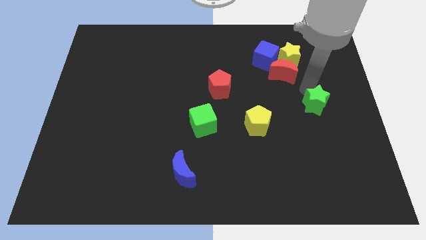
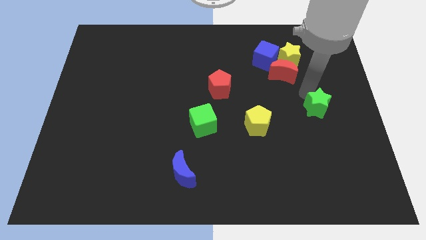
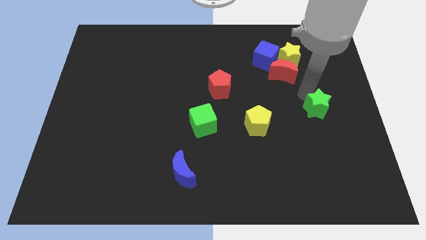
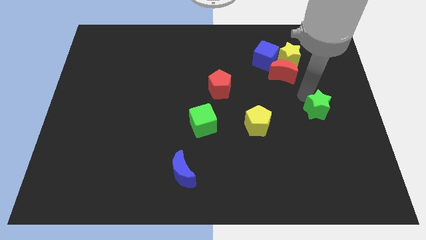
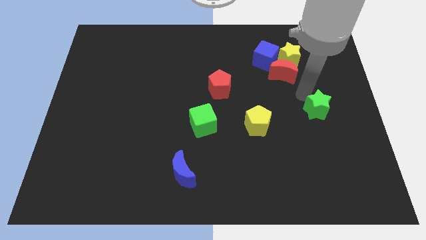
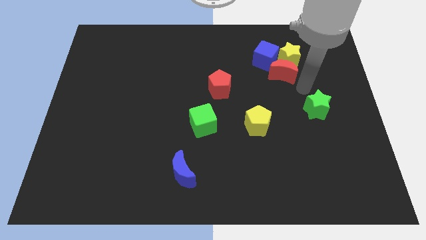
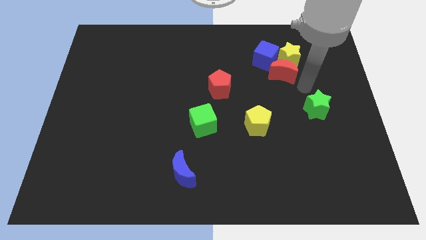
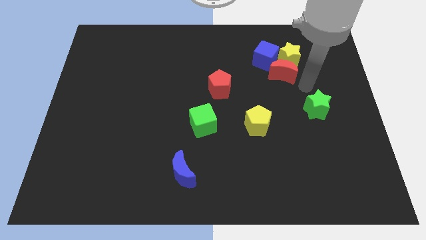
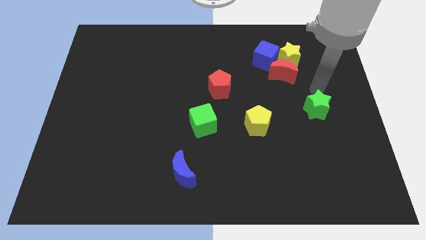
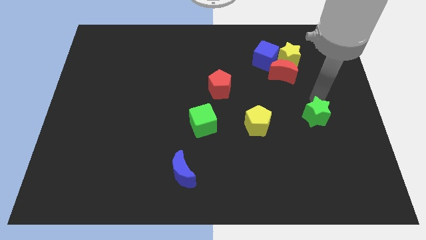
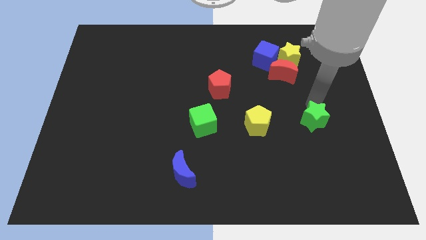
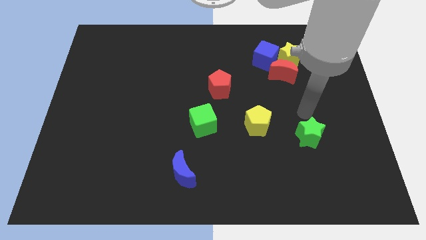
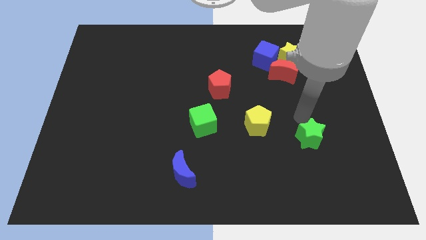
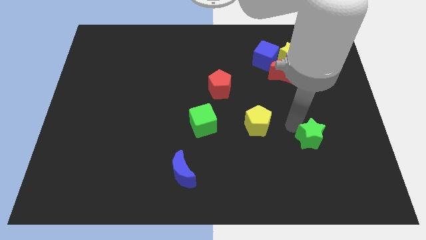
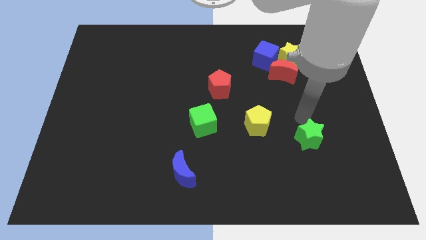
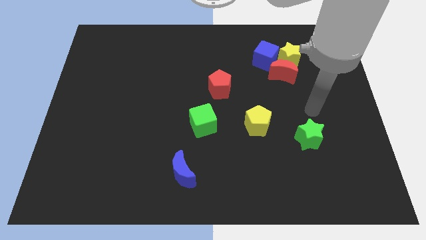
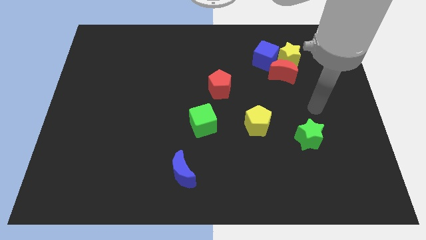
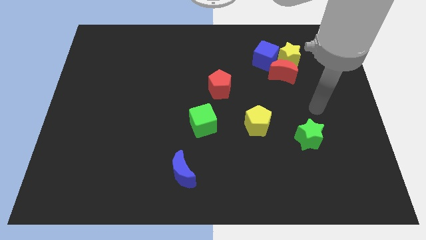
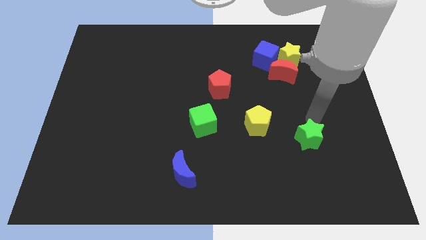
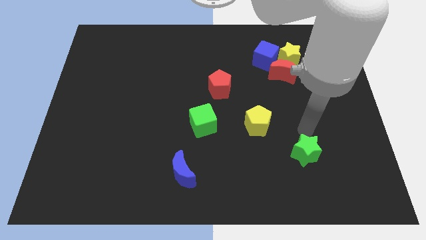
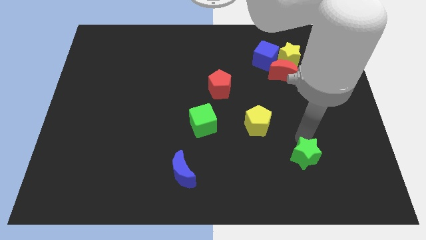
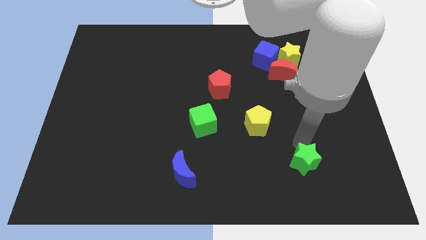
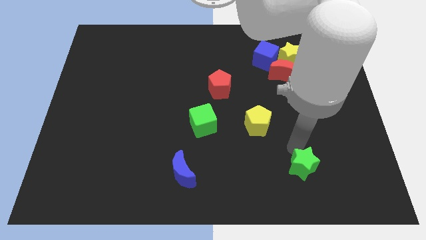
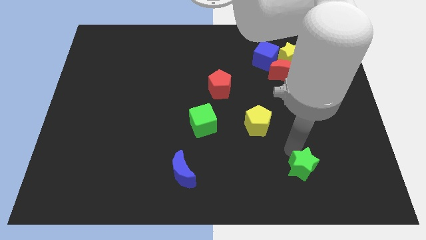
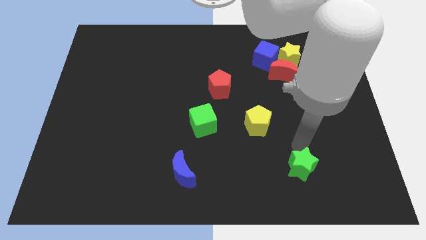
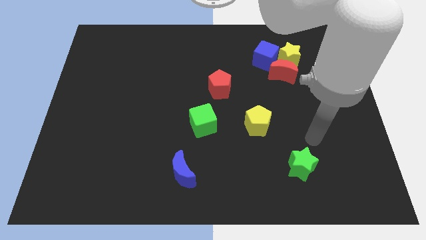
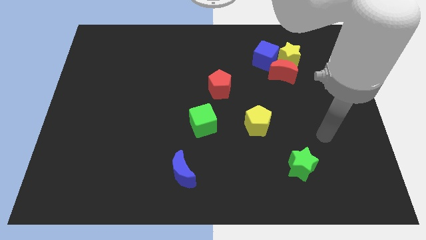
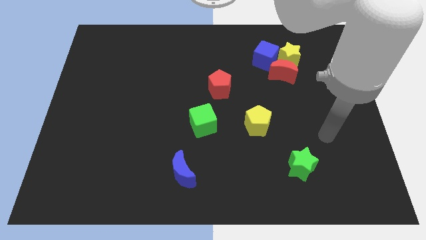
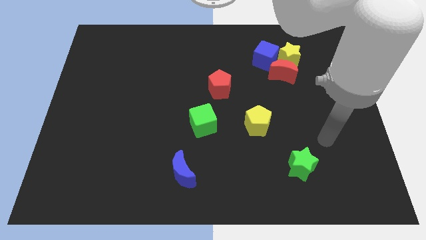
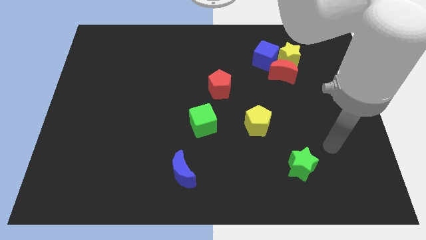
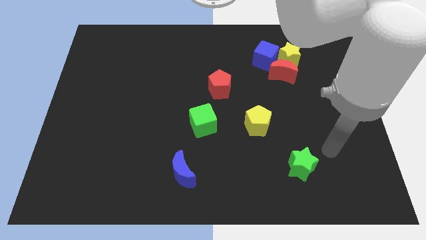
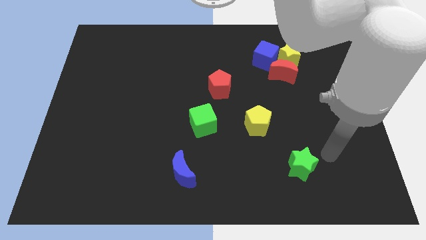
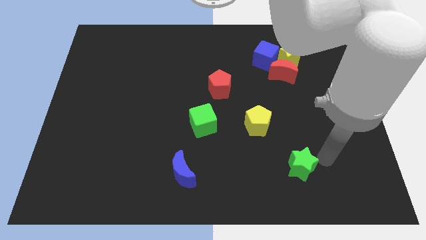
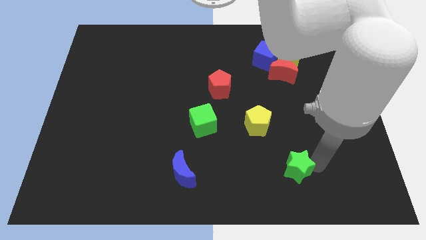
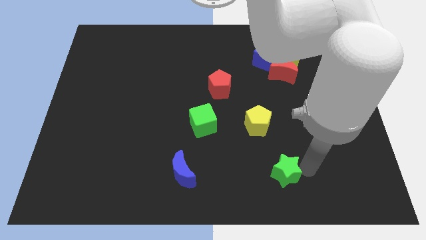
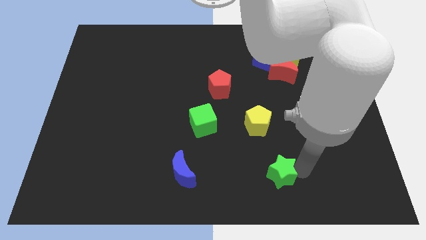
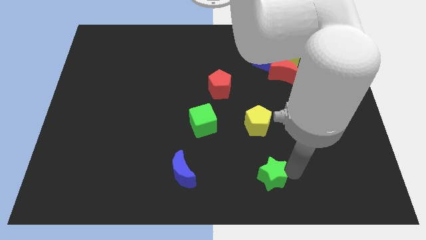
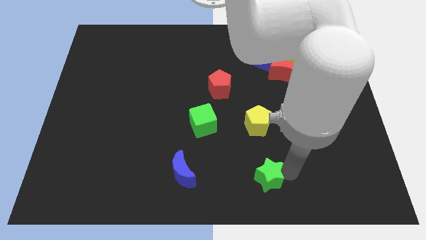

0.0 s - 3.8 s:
place the green star right to the blue moon

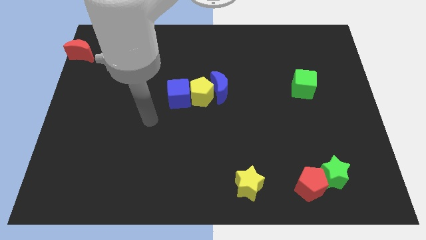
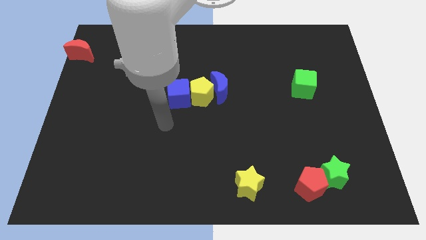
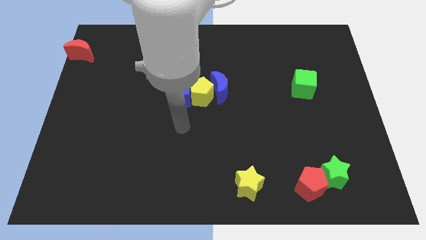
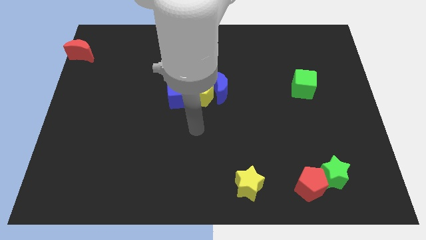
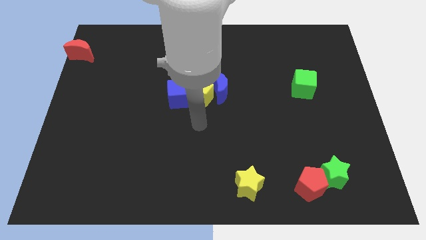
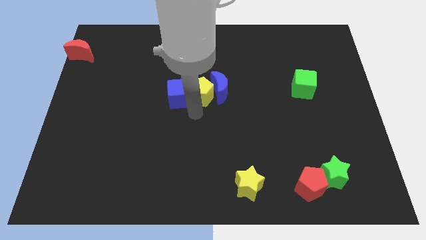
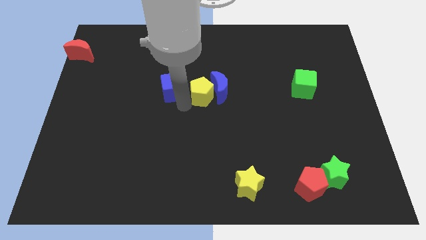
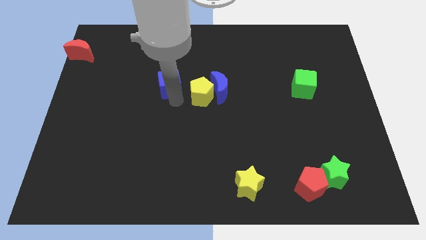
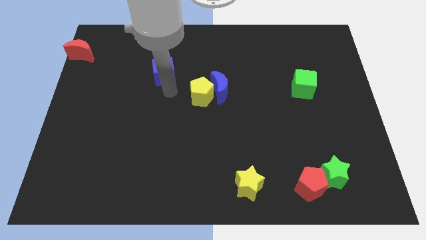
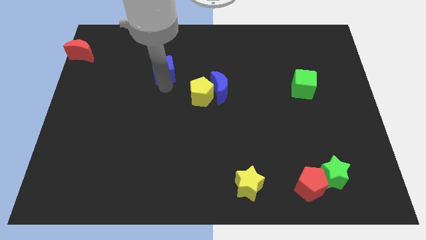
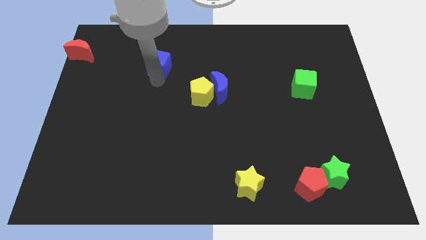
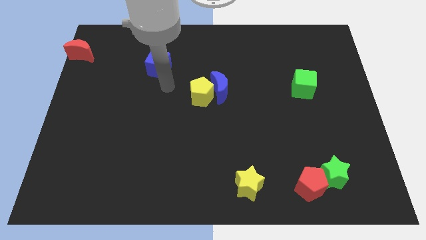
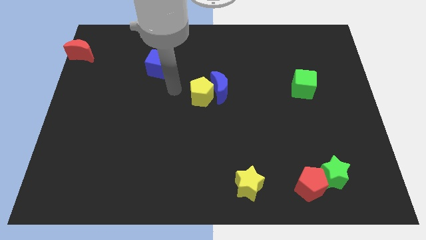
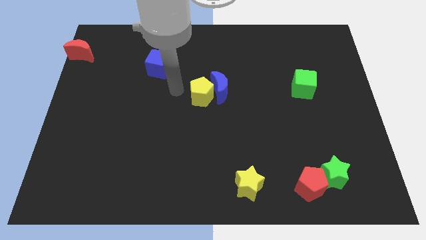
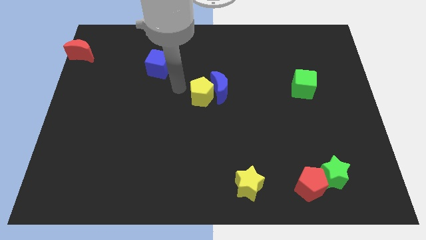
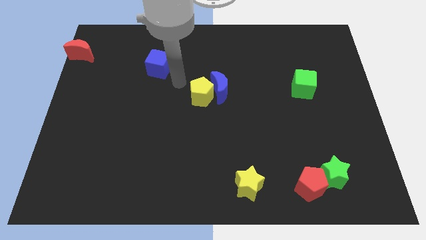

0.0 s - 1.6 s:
move the blue cube away from the yellow pentagon

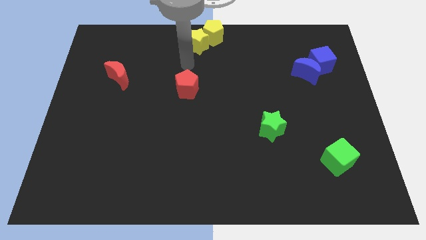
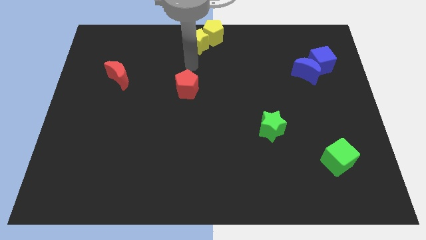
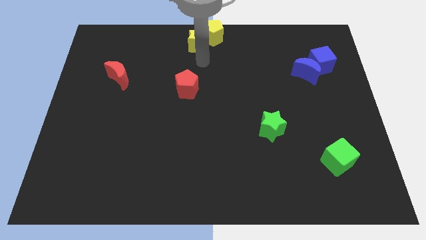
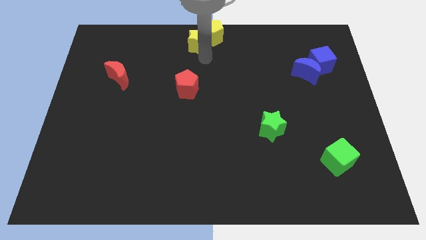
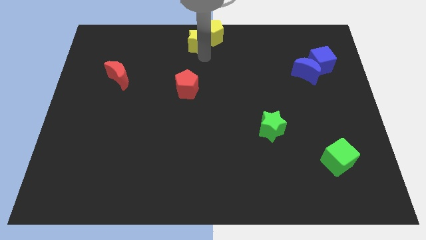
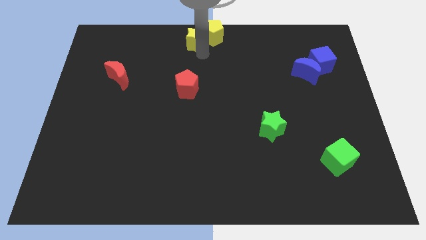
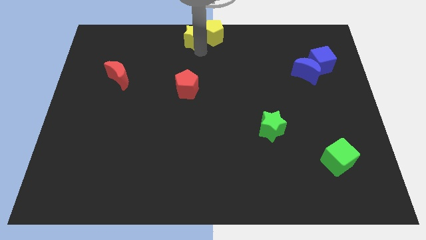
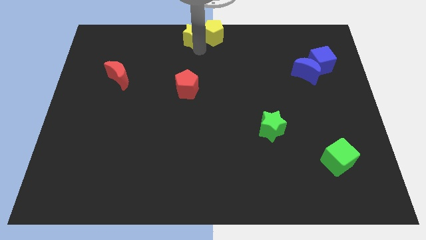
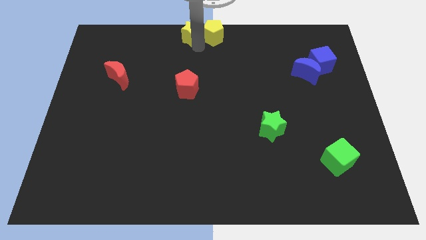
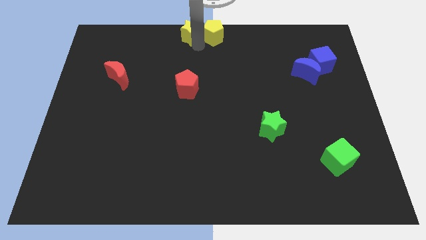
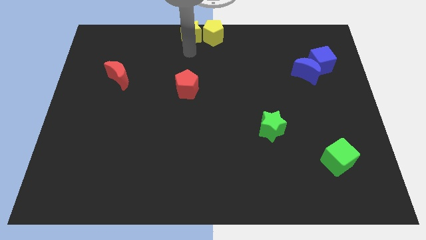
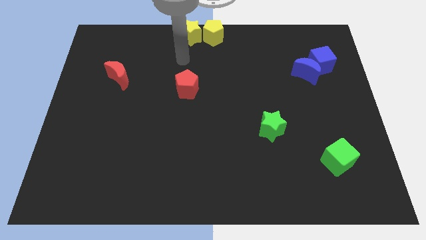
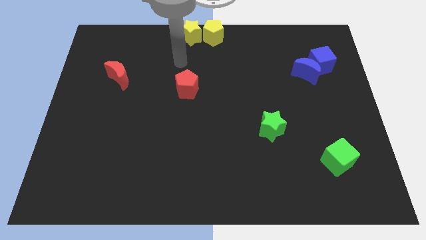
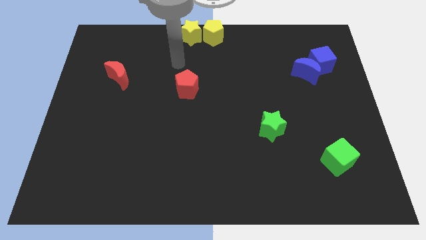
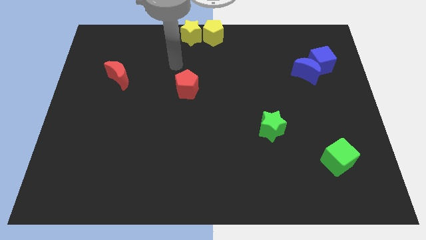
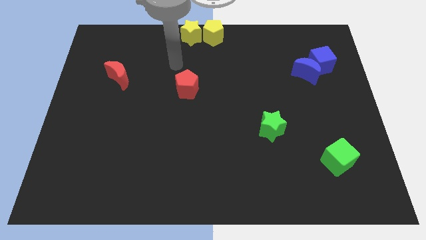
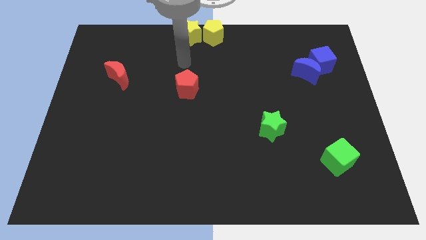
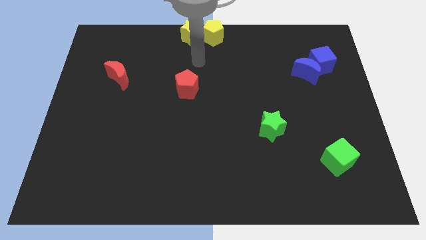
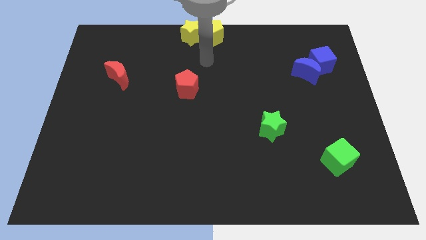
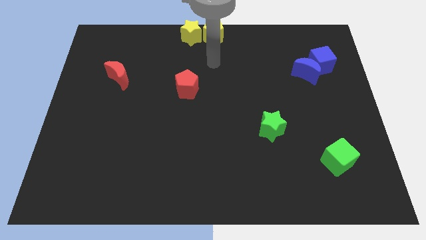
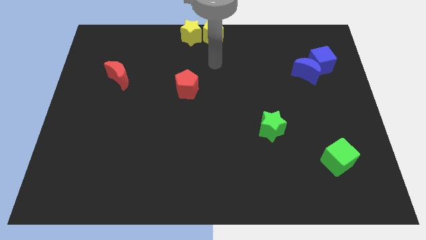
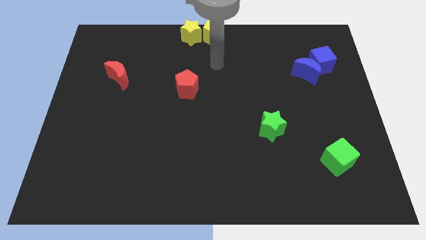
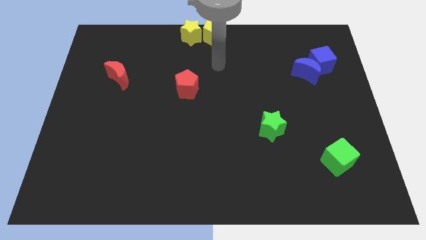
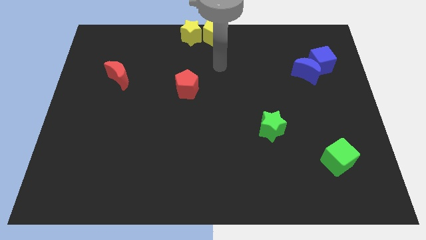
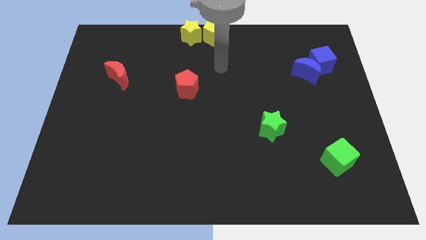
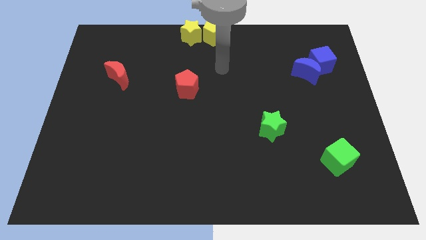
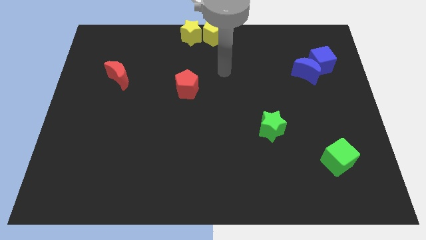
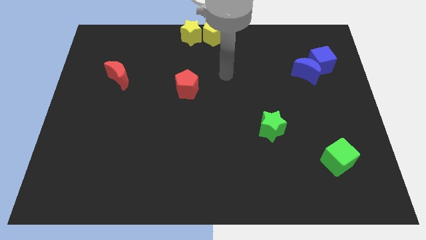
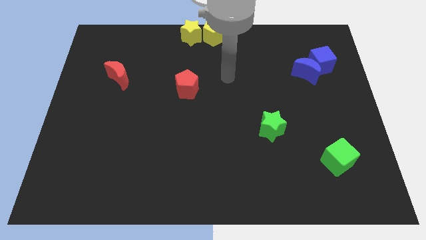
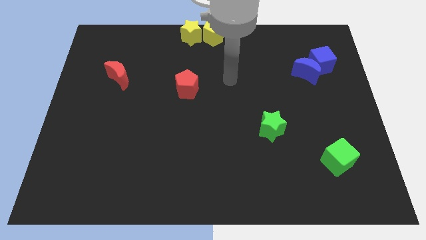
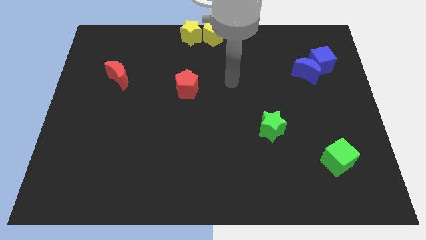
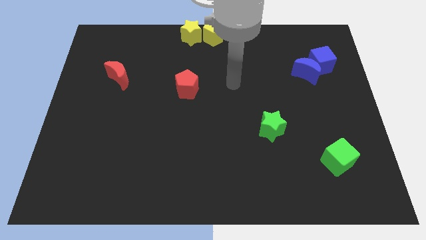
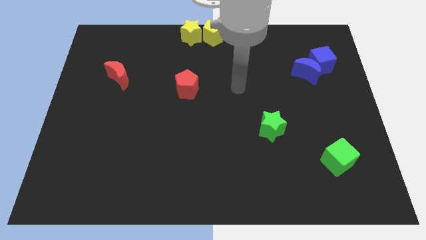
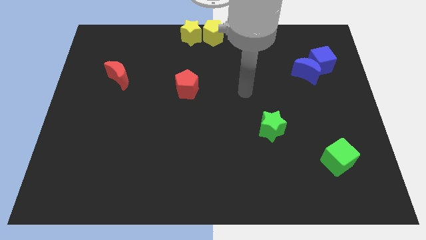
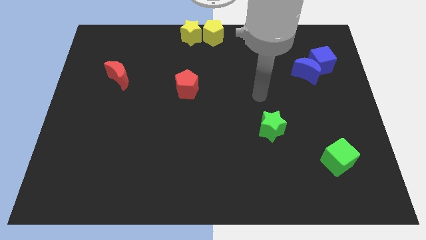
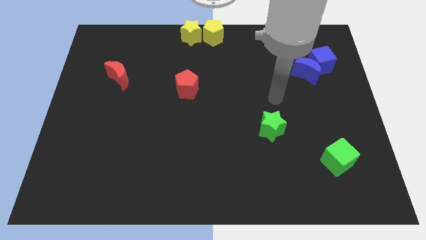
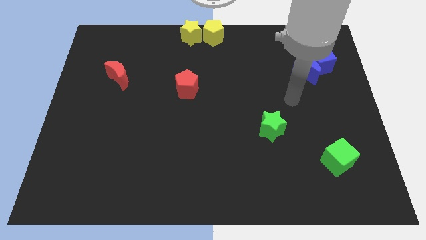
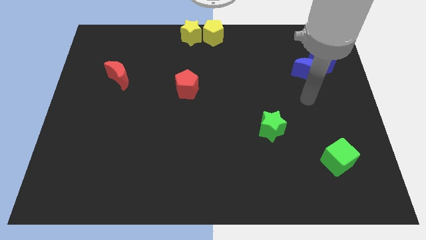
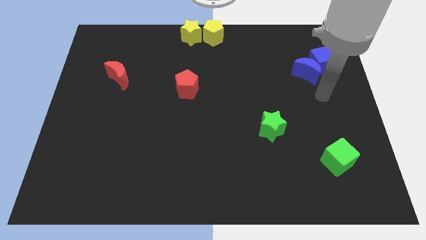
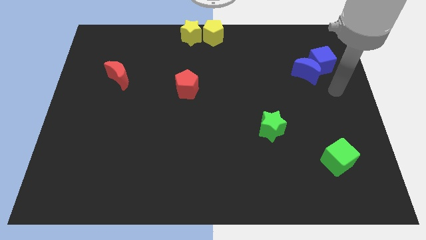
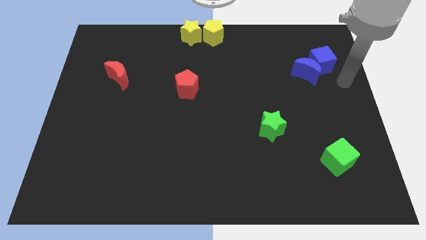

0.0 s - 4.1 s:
move your arm away from the yellow star
